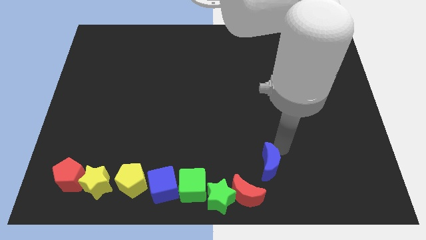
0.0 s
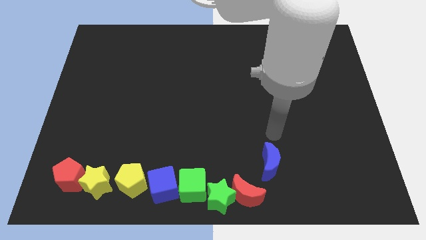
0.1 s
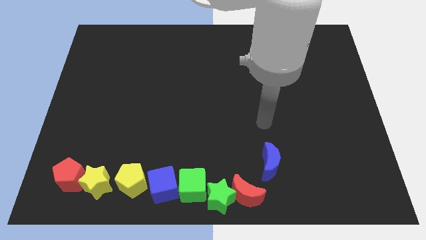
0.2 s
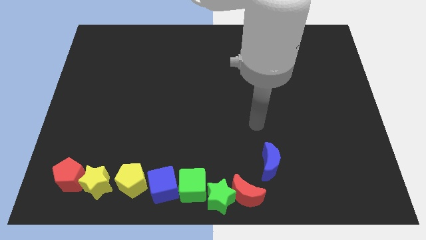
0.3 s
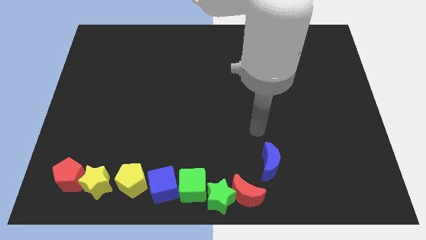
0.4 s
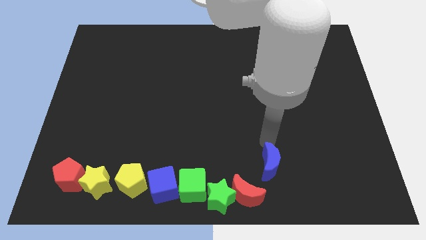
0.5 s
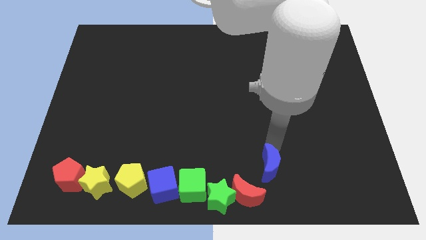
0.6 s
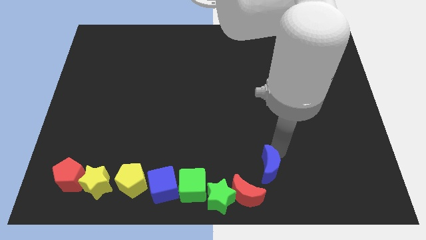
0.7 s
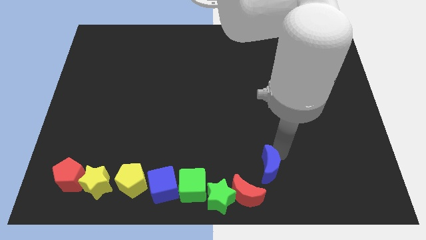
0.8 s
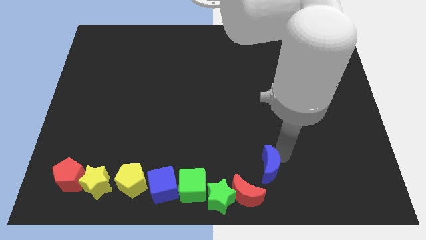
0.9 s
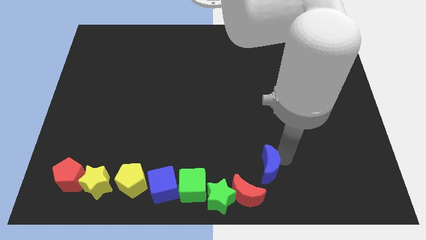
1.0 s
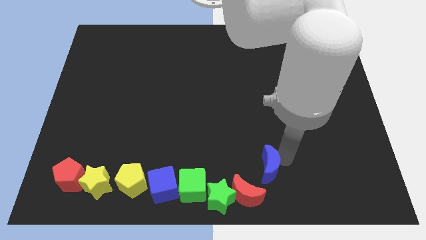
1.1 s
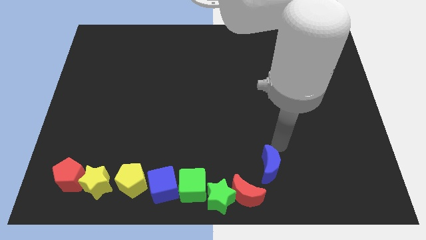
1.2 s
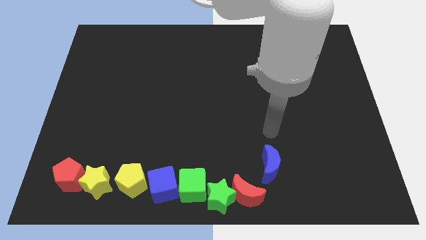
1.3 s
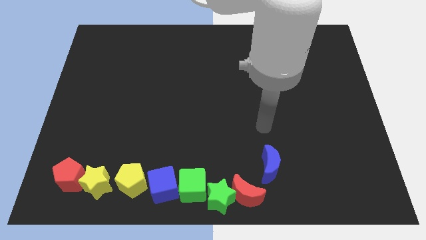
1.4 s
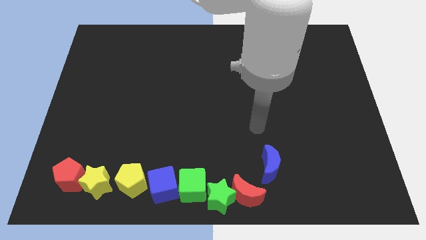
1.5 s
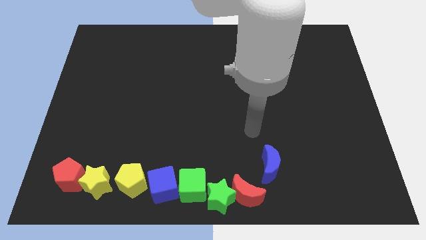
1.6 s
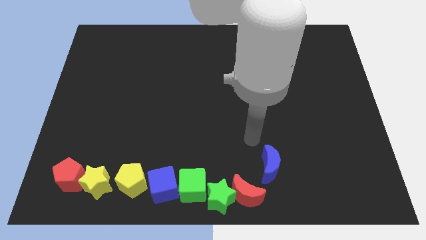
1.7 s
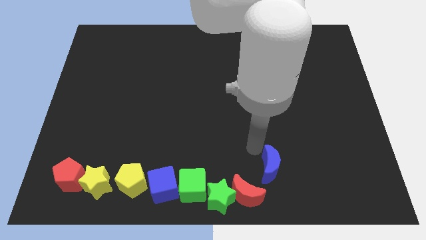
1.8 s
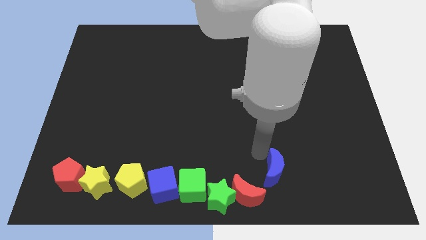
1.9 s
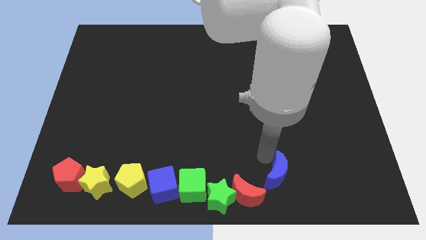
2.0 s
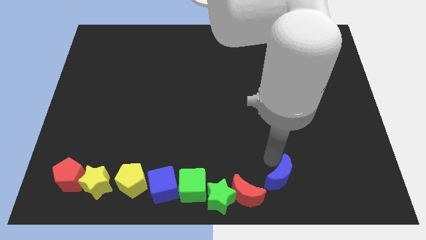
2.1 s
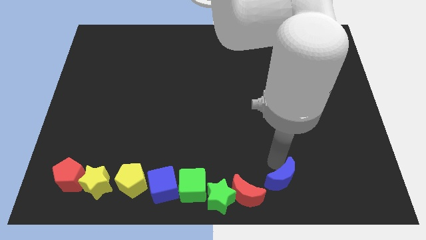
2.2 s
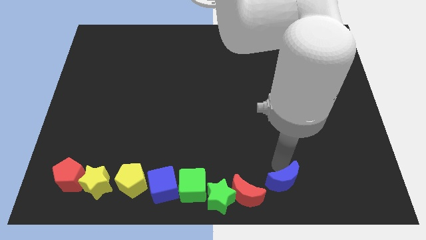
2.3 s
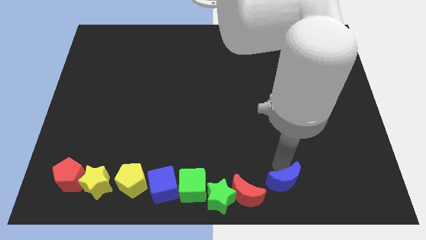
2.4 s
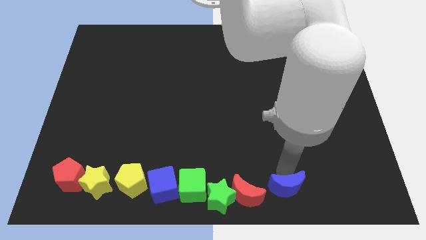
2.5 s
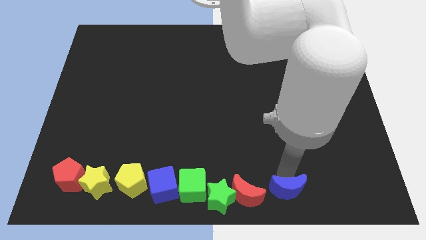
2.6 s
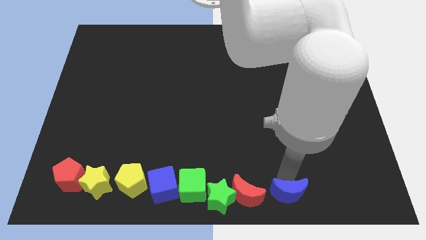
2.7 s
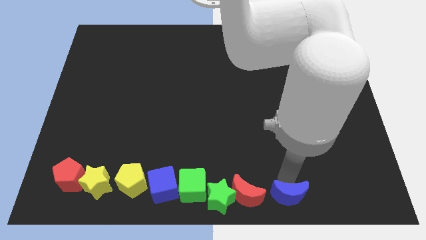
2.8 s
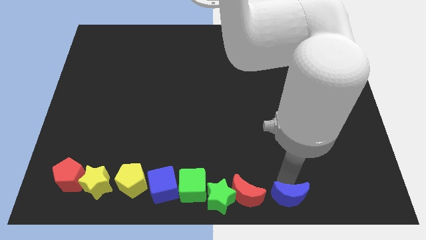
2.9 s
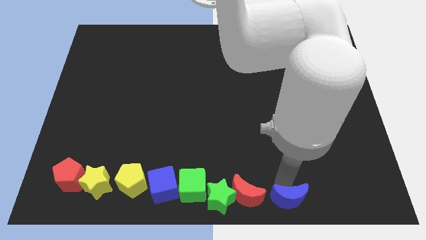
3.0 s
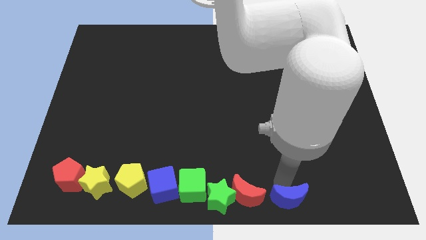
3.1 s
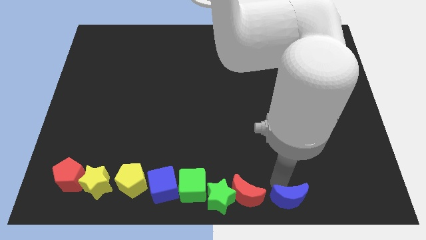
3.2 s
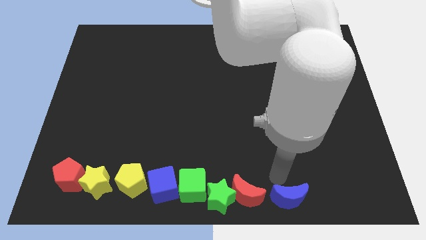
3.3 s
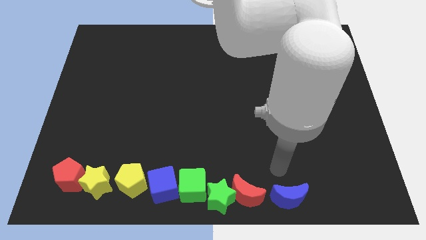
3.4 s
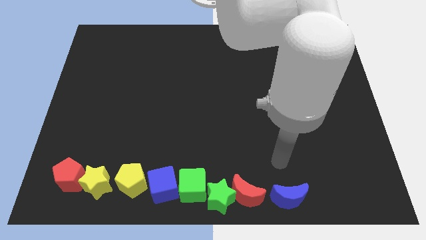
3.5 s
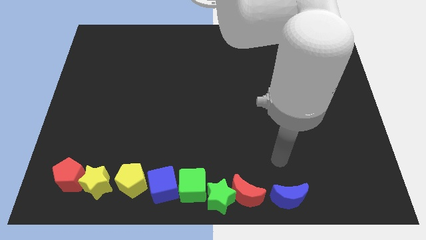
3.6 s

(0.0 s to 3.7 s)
slide the blue crescent near to the right side of the red crescent

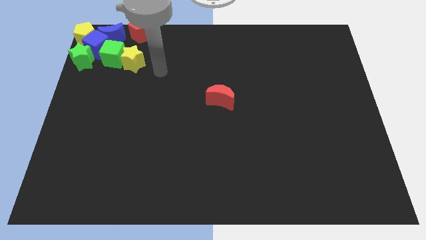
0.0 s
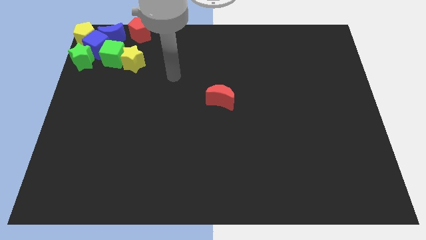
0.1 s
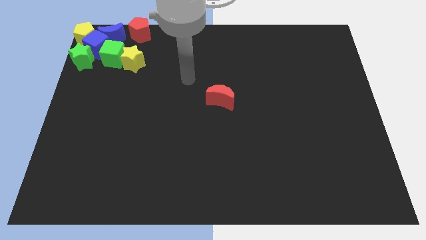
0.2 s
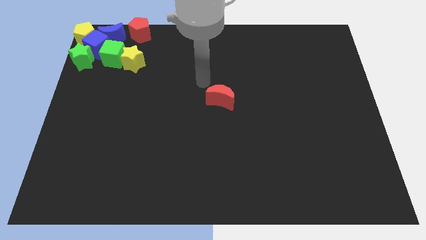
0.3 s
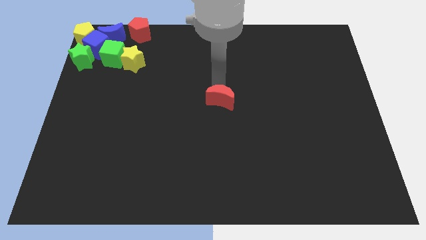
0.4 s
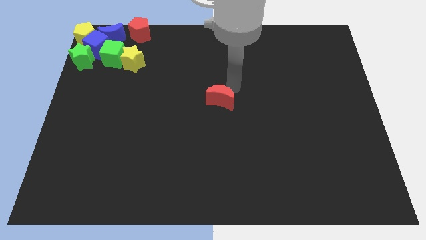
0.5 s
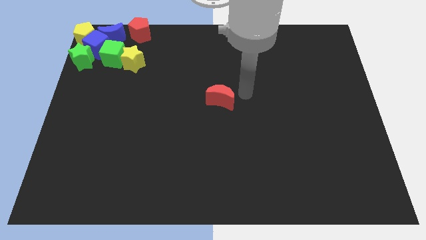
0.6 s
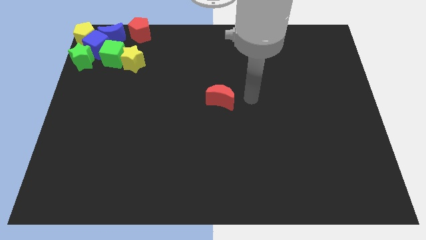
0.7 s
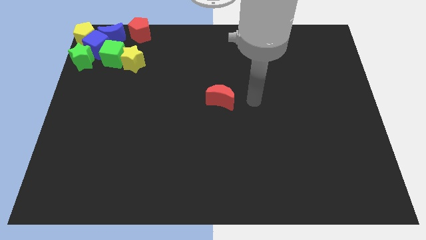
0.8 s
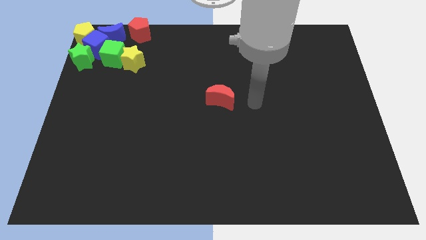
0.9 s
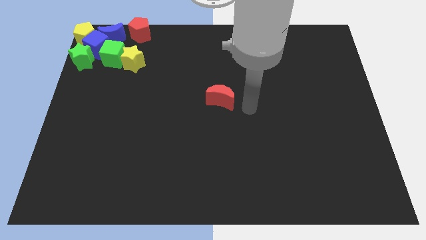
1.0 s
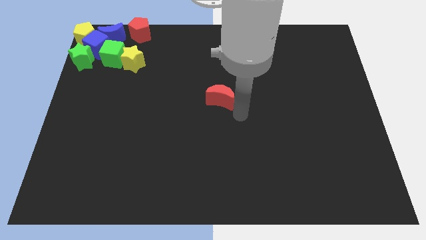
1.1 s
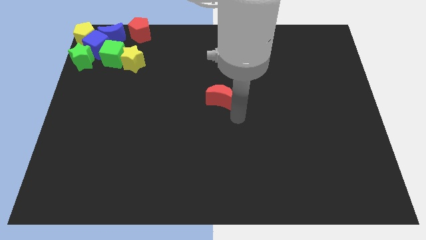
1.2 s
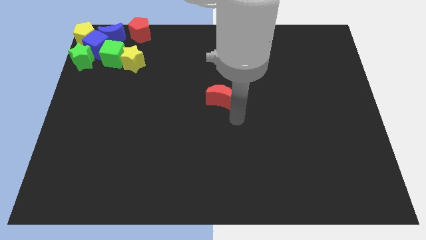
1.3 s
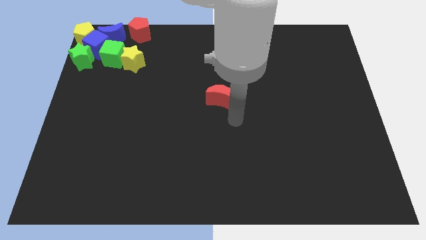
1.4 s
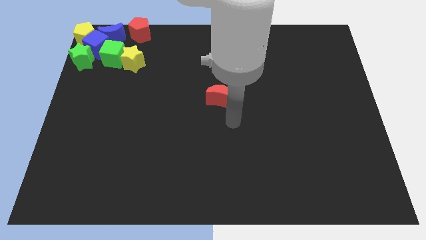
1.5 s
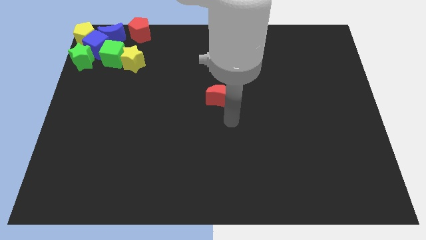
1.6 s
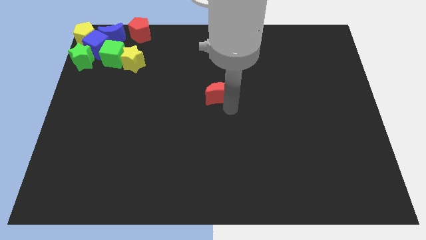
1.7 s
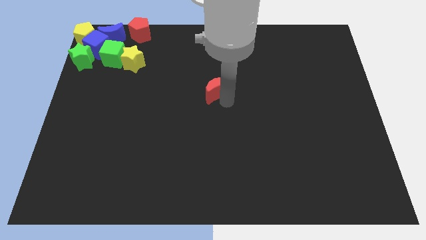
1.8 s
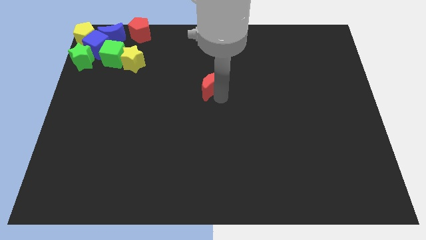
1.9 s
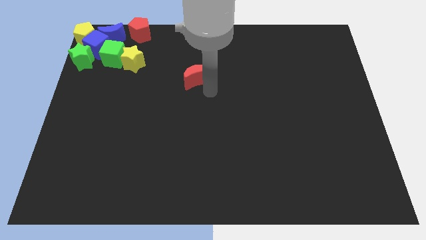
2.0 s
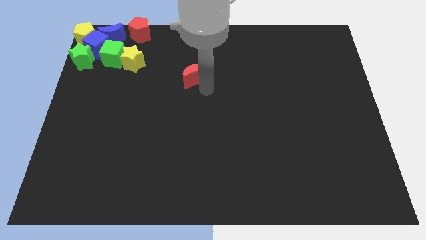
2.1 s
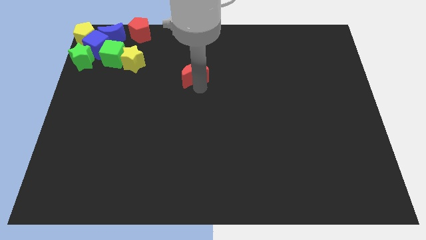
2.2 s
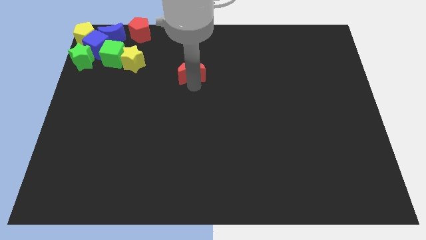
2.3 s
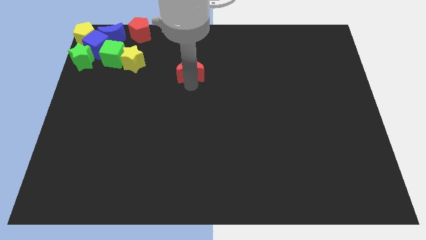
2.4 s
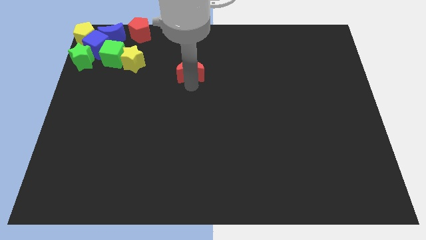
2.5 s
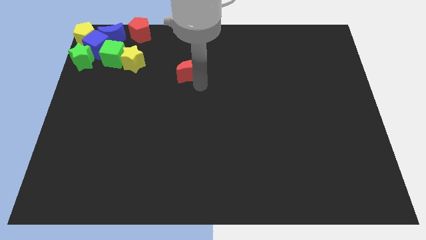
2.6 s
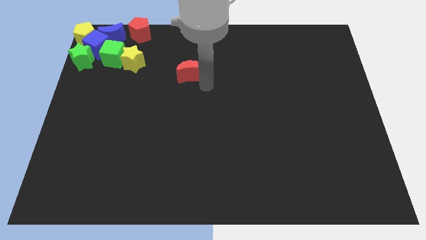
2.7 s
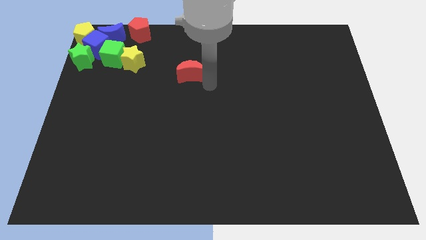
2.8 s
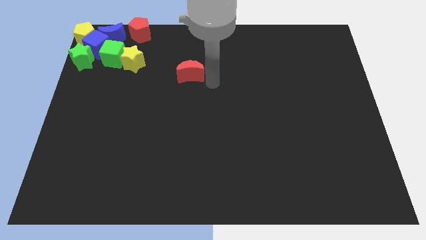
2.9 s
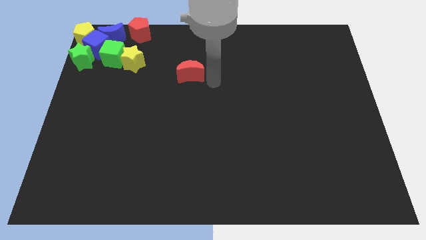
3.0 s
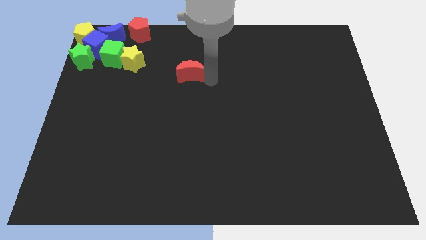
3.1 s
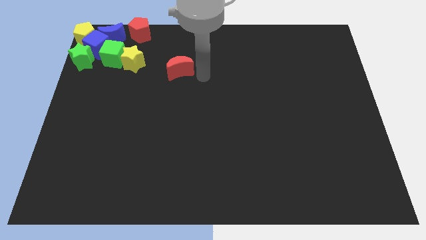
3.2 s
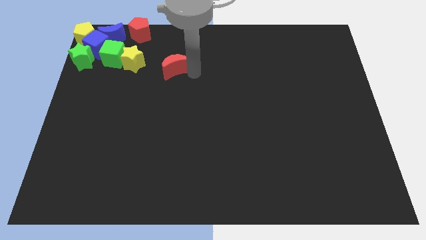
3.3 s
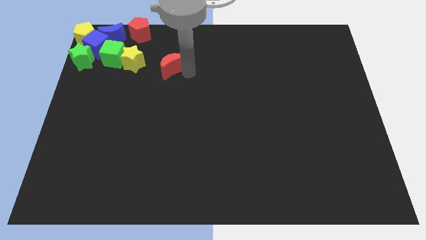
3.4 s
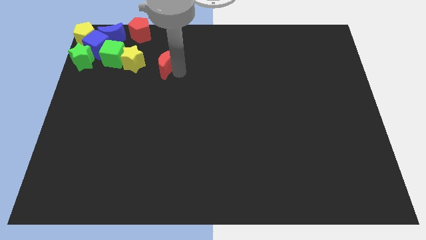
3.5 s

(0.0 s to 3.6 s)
place the red moon towards the yellow star

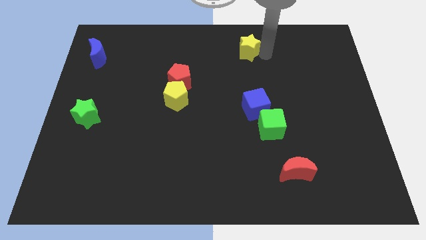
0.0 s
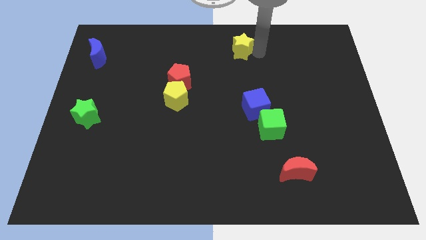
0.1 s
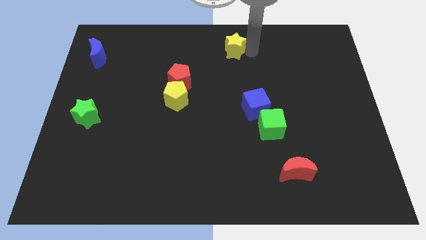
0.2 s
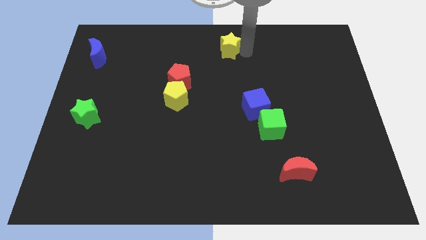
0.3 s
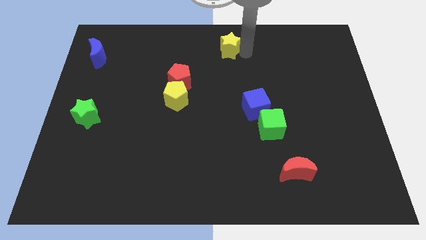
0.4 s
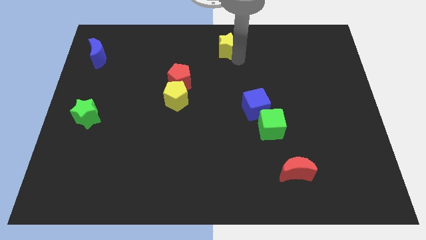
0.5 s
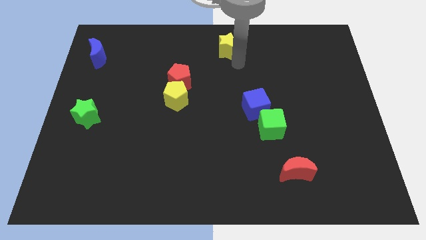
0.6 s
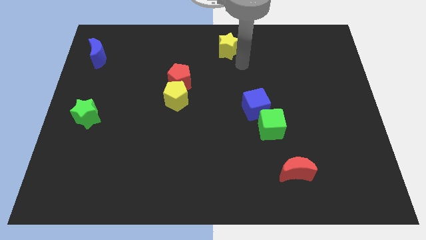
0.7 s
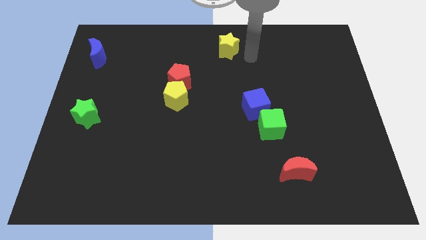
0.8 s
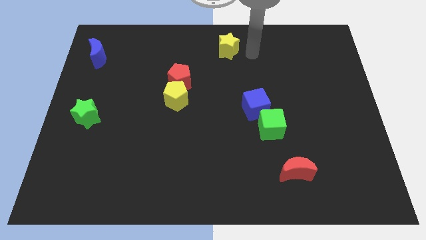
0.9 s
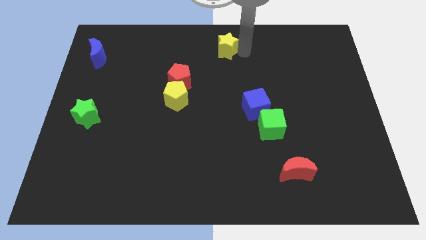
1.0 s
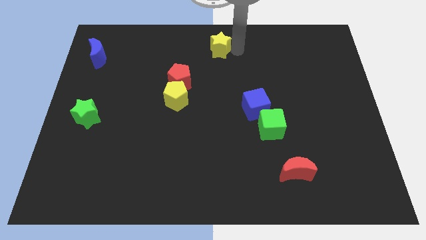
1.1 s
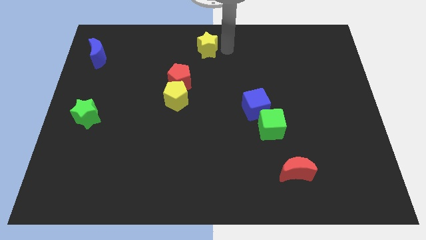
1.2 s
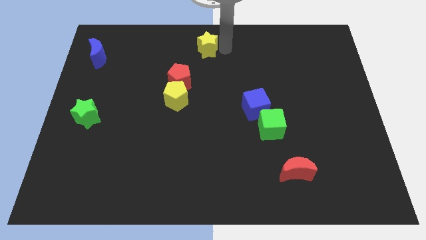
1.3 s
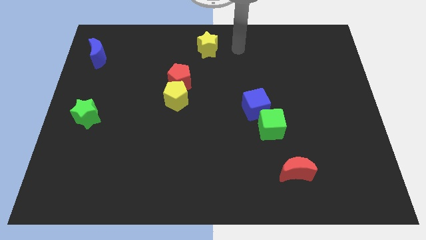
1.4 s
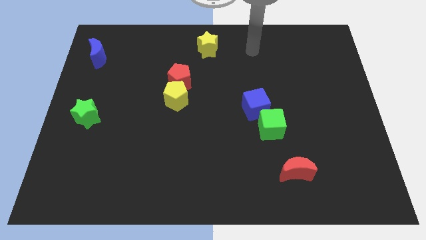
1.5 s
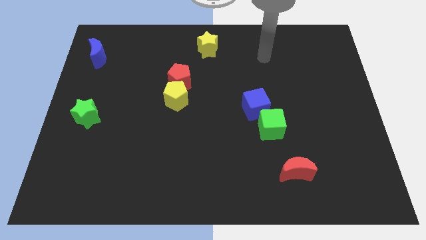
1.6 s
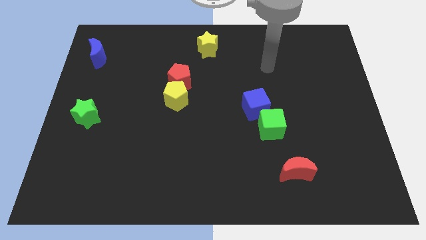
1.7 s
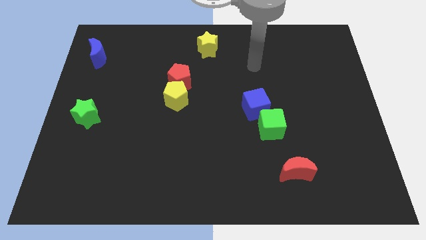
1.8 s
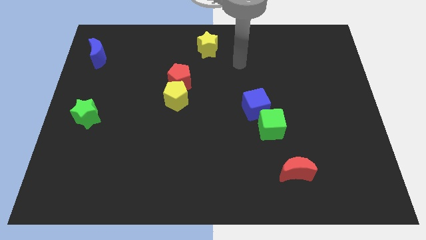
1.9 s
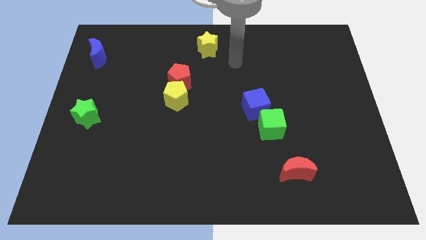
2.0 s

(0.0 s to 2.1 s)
move the yellow star diagonally on the top right side of the red pentagon
